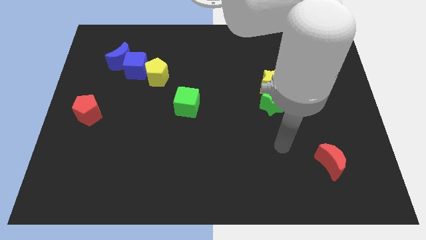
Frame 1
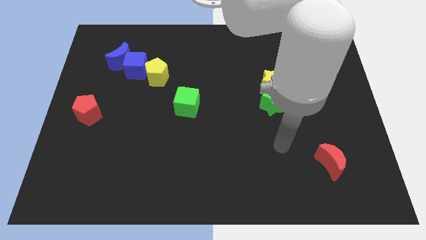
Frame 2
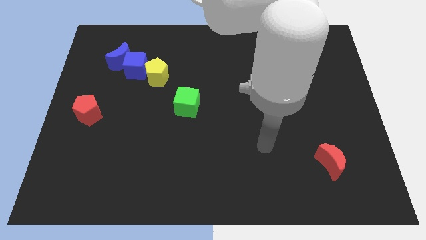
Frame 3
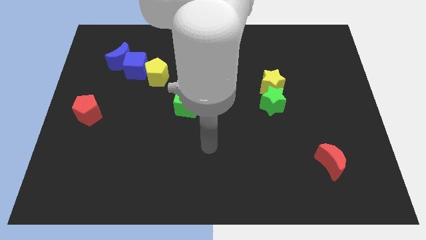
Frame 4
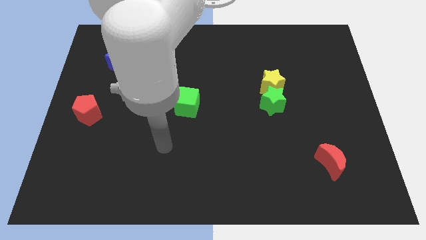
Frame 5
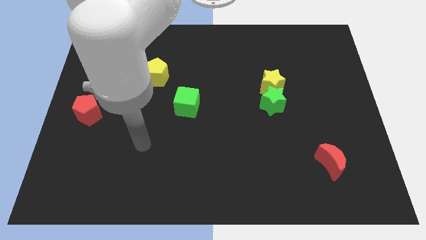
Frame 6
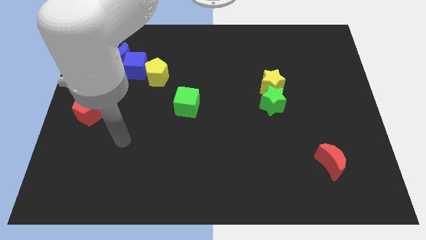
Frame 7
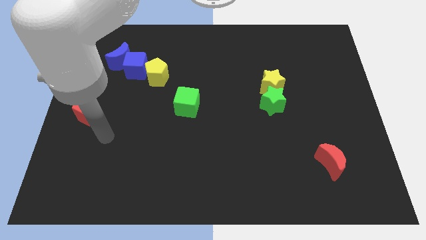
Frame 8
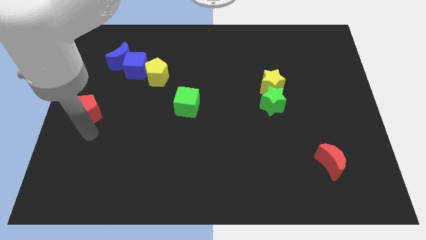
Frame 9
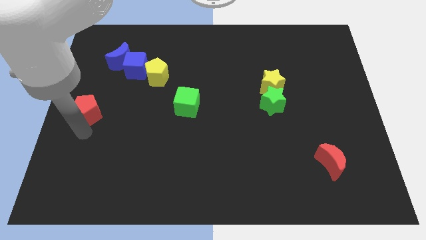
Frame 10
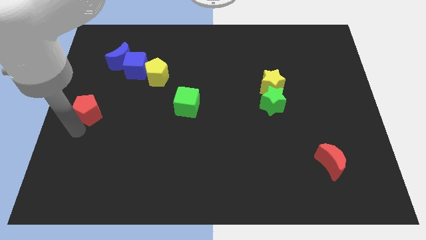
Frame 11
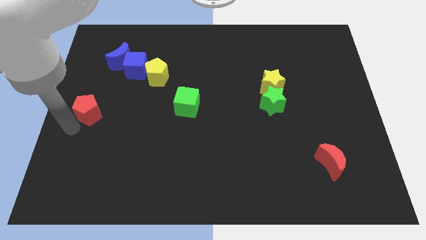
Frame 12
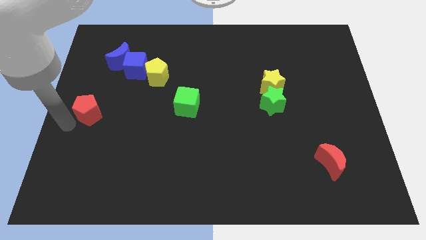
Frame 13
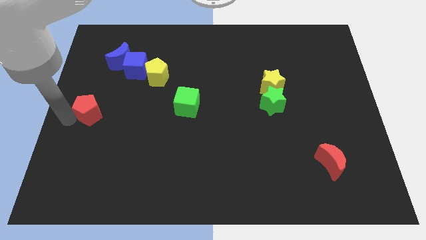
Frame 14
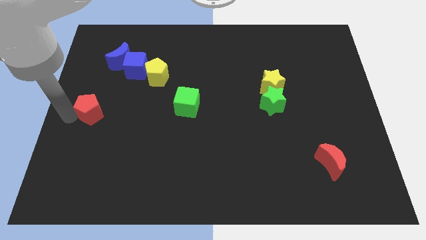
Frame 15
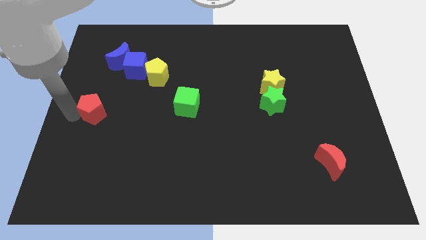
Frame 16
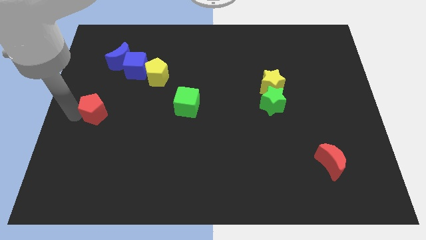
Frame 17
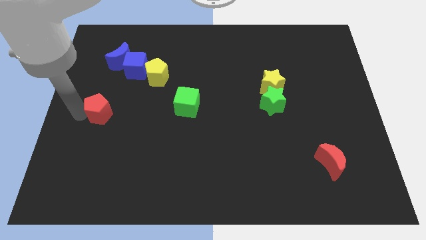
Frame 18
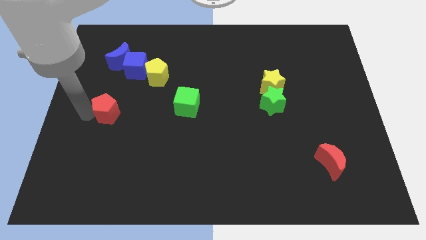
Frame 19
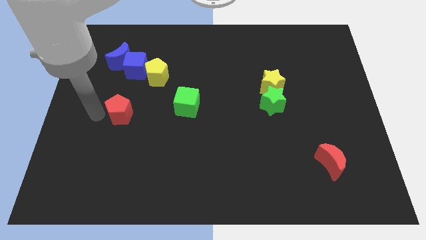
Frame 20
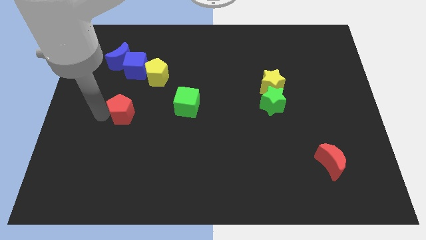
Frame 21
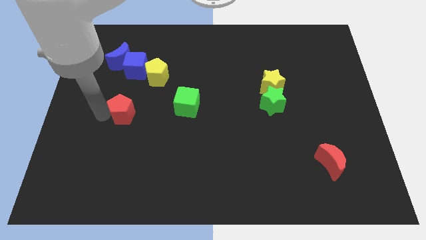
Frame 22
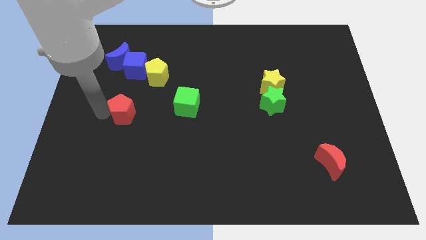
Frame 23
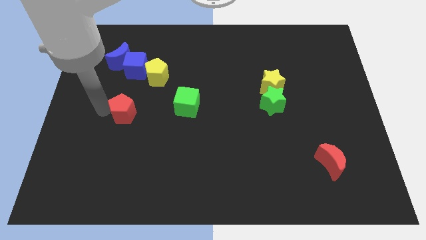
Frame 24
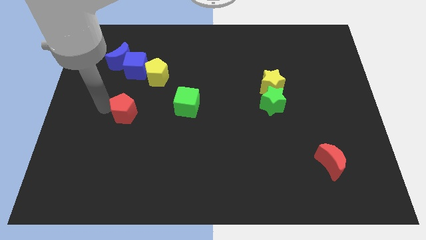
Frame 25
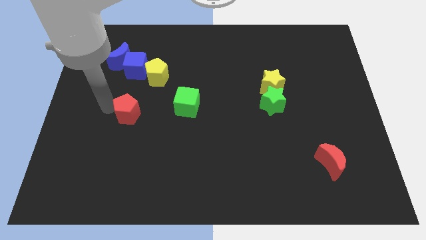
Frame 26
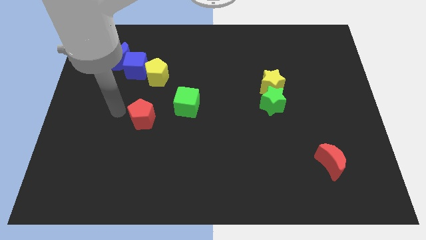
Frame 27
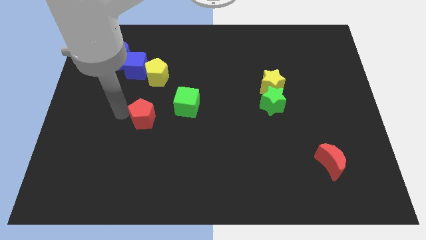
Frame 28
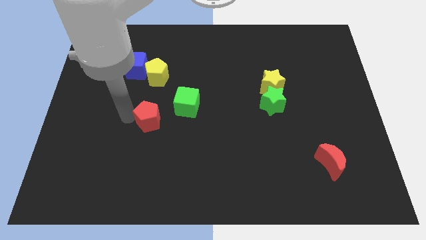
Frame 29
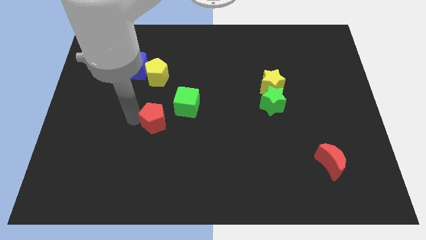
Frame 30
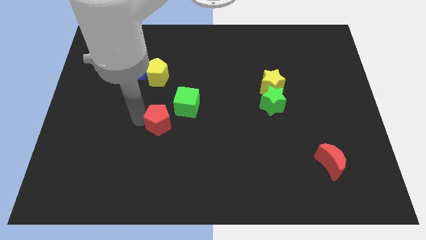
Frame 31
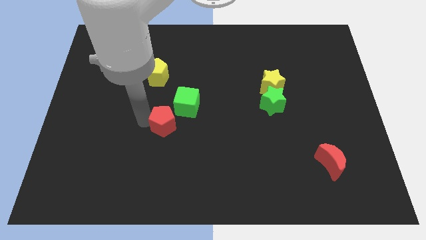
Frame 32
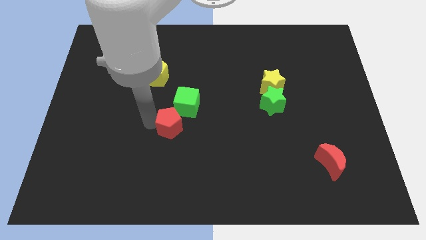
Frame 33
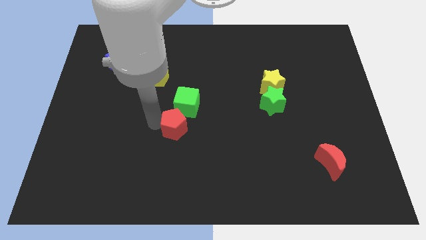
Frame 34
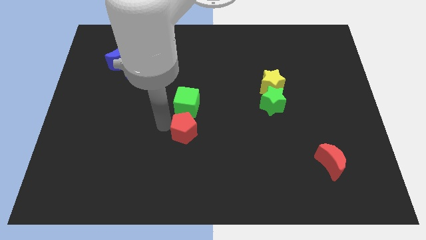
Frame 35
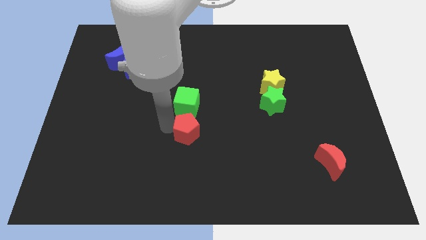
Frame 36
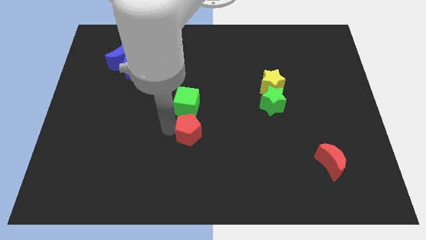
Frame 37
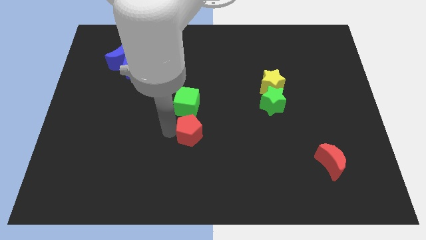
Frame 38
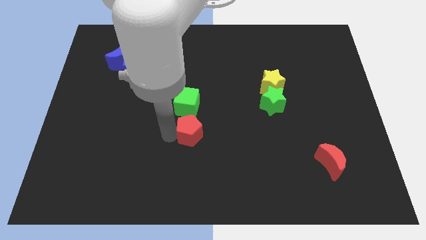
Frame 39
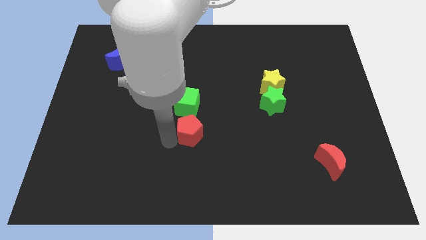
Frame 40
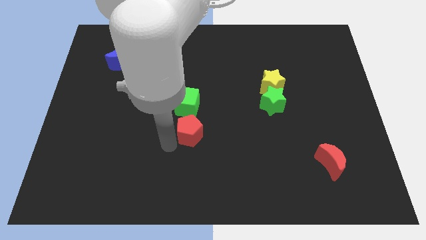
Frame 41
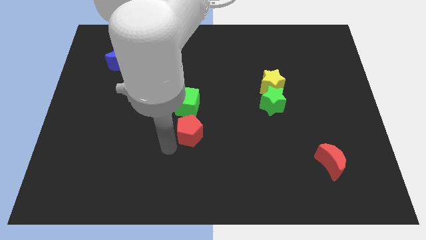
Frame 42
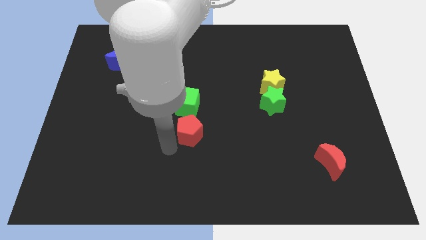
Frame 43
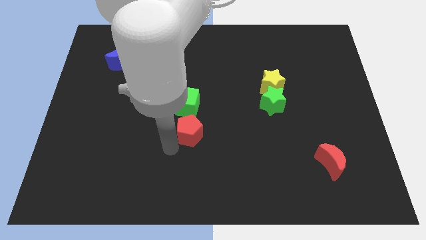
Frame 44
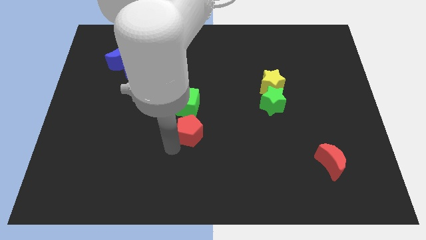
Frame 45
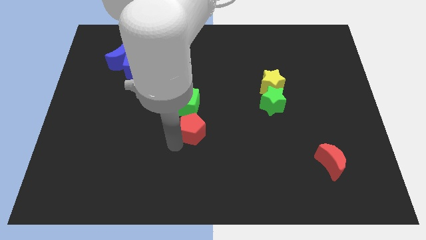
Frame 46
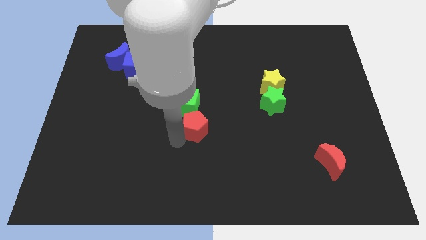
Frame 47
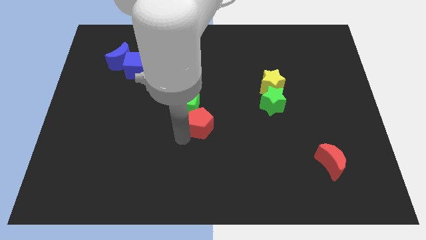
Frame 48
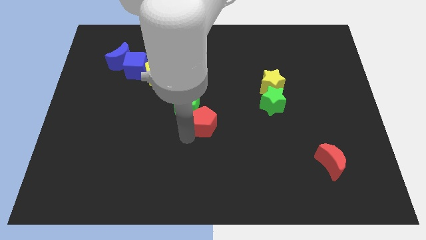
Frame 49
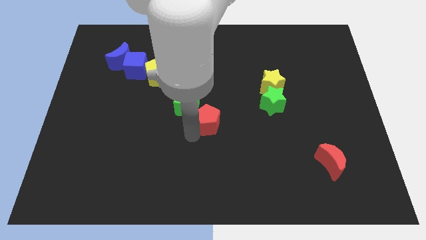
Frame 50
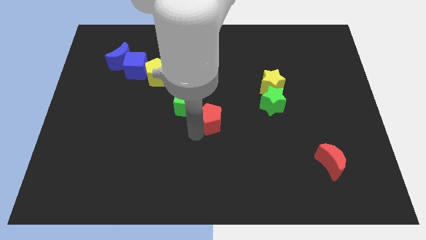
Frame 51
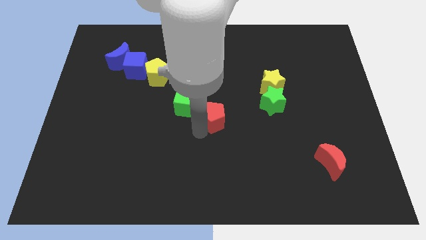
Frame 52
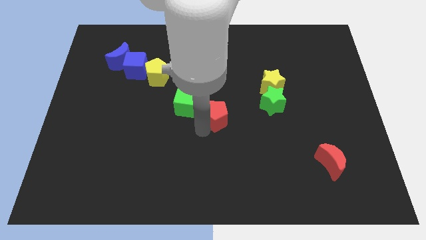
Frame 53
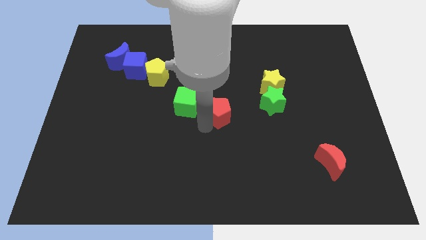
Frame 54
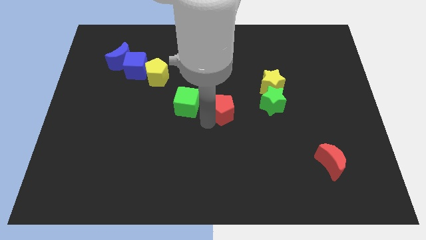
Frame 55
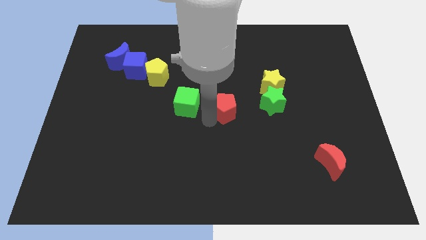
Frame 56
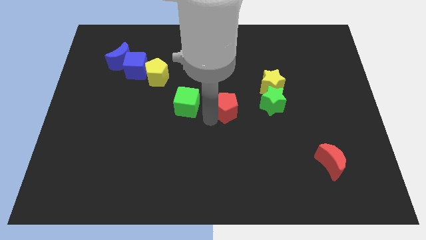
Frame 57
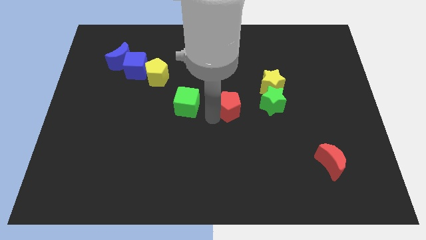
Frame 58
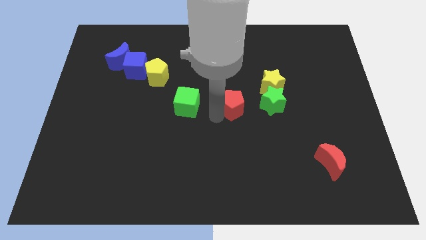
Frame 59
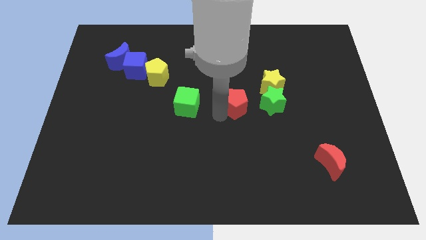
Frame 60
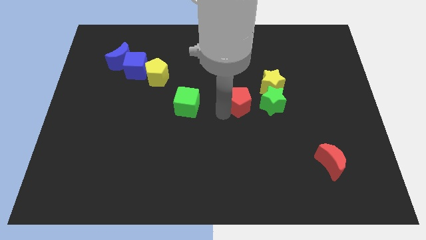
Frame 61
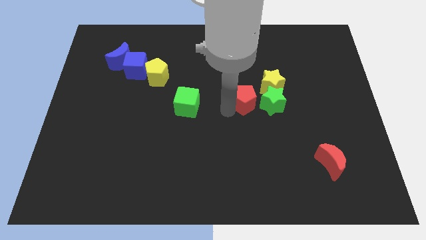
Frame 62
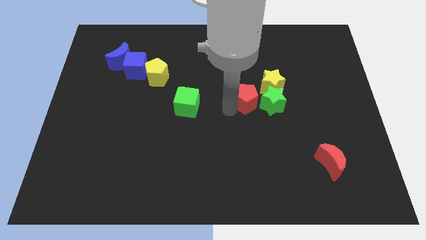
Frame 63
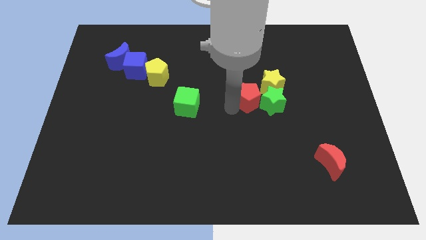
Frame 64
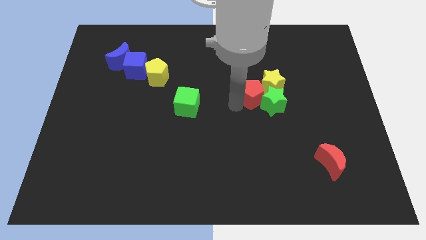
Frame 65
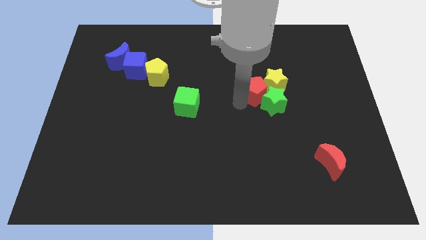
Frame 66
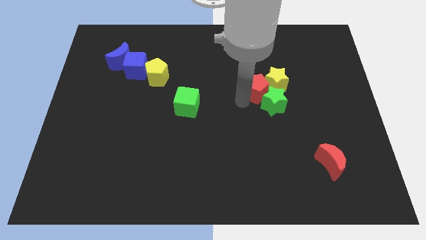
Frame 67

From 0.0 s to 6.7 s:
push the red pentagon next to the yellow star

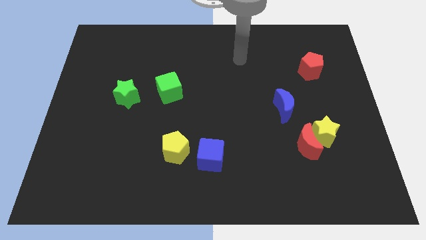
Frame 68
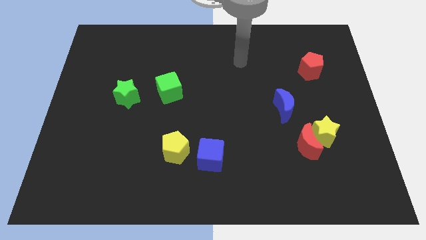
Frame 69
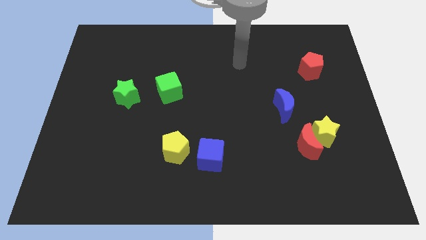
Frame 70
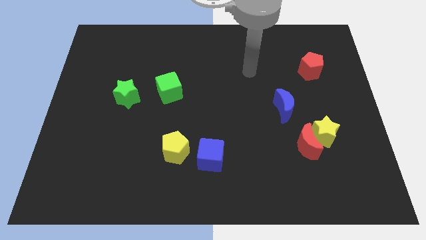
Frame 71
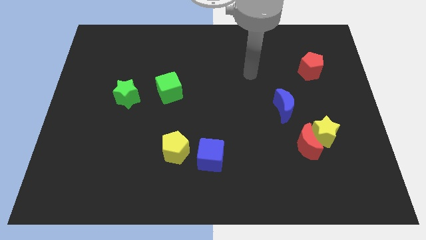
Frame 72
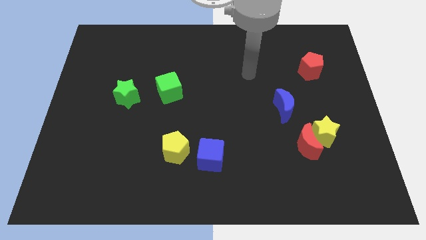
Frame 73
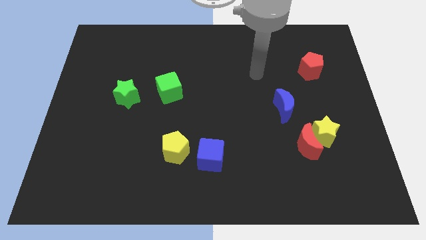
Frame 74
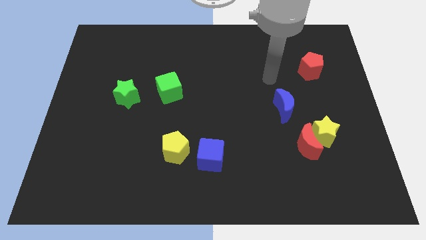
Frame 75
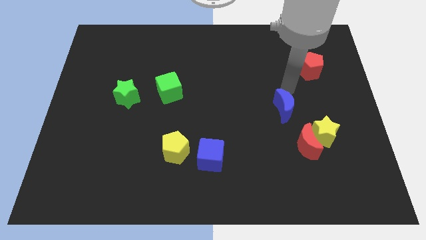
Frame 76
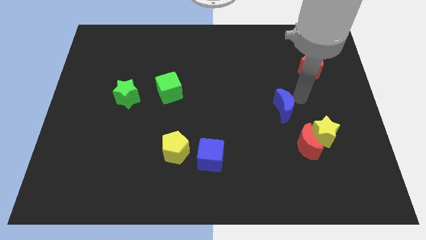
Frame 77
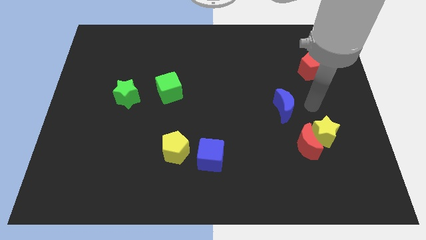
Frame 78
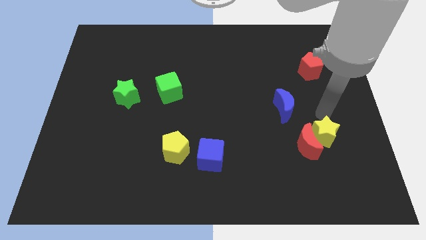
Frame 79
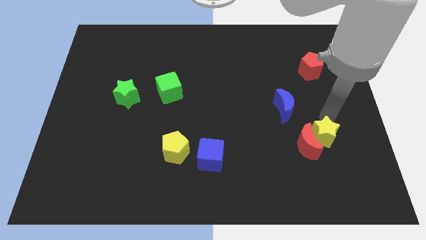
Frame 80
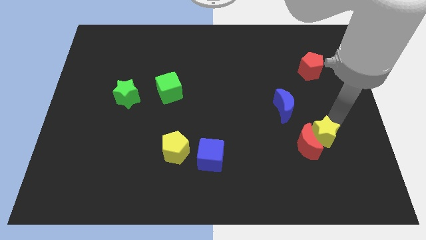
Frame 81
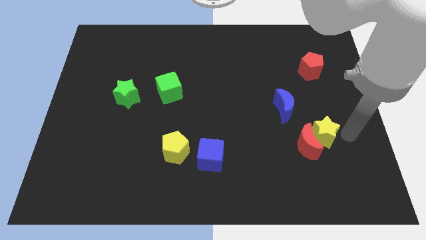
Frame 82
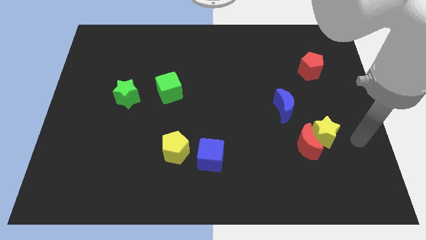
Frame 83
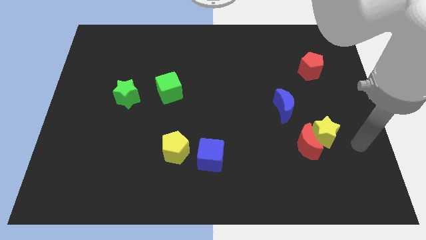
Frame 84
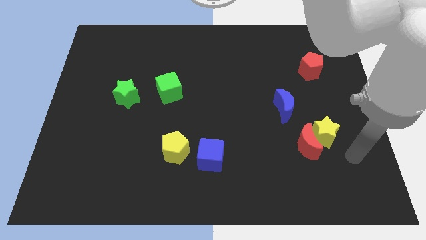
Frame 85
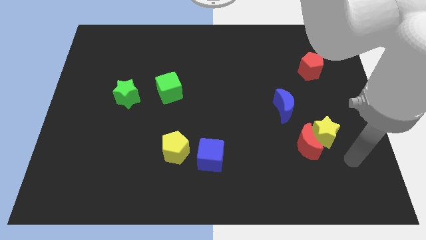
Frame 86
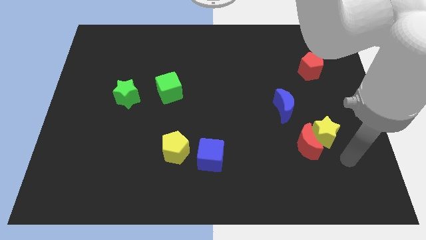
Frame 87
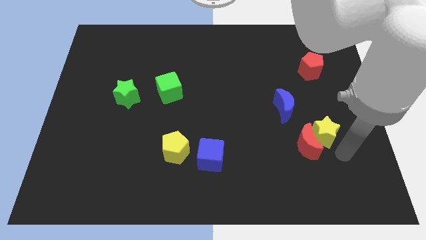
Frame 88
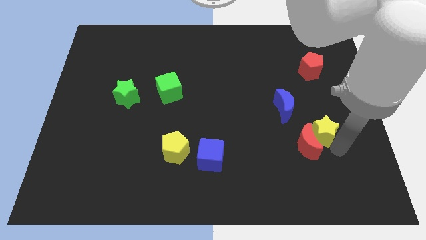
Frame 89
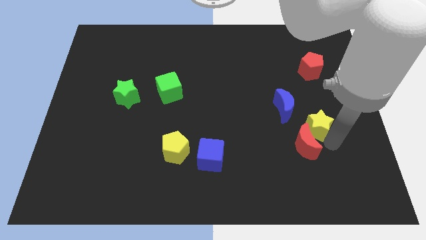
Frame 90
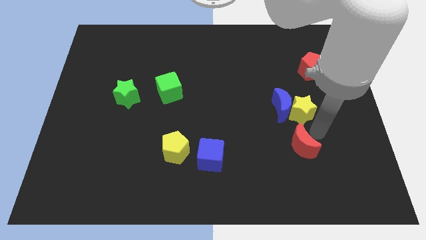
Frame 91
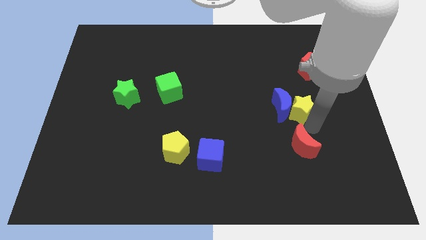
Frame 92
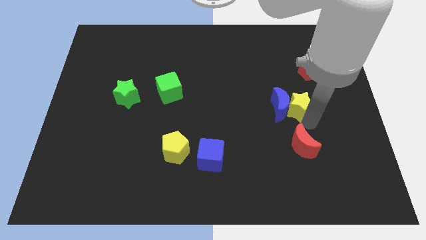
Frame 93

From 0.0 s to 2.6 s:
move the yellow star next to the blue moon
